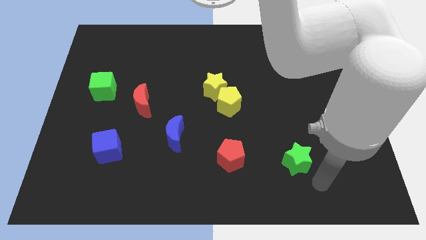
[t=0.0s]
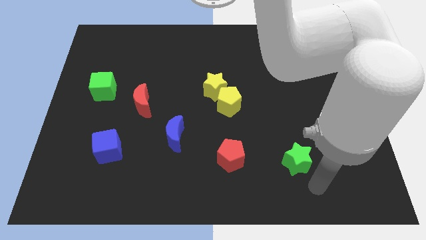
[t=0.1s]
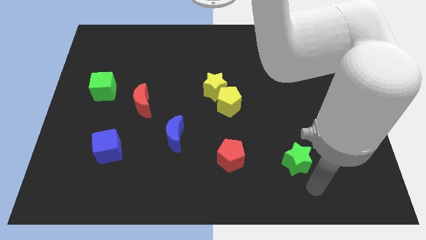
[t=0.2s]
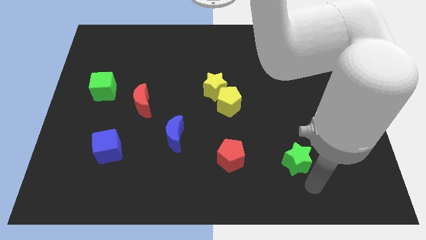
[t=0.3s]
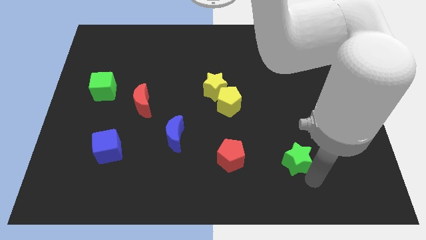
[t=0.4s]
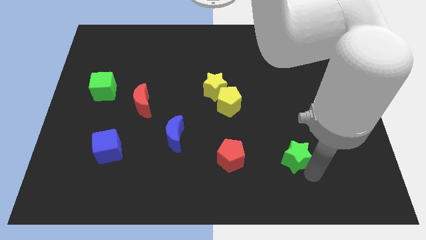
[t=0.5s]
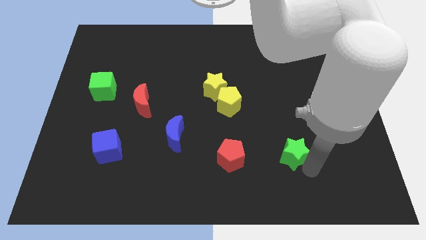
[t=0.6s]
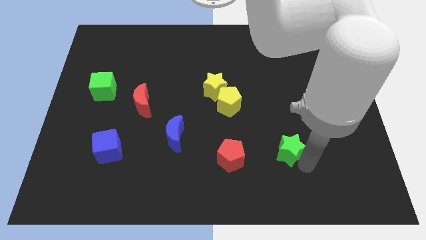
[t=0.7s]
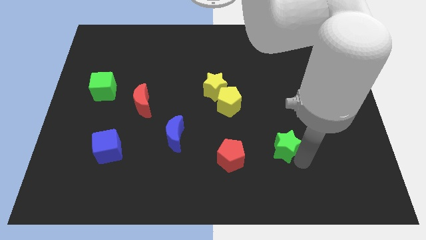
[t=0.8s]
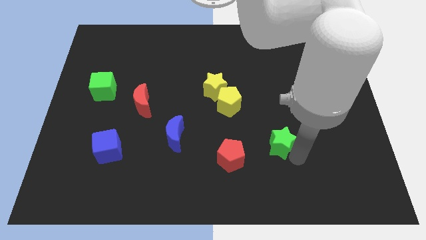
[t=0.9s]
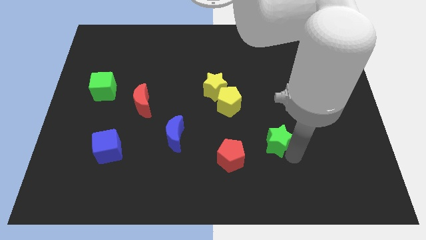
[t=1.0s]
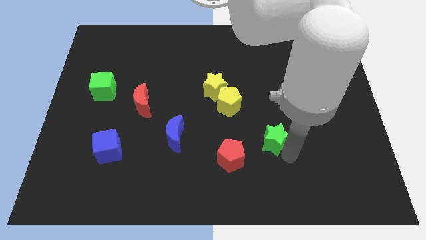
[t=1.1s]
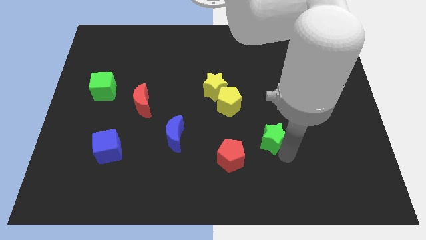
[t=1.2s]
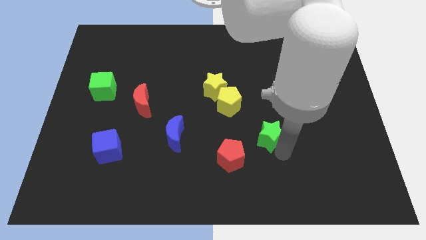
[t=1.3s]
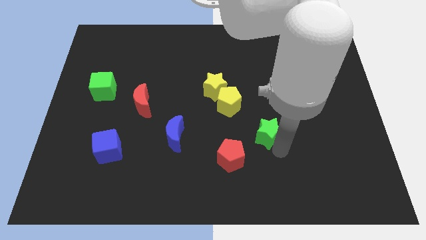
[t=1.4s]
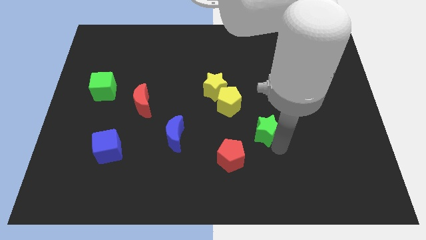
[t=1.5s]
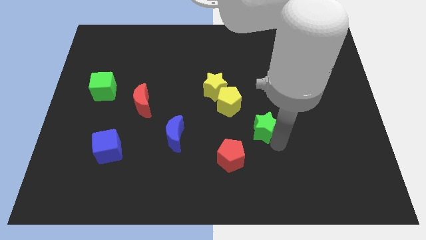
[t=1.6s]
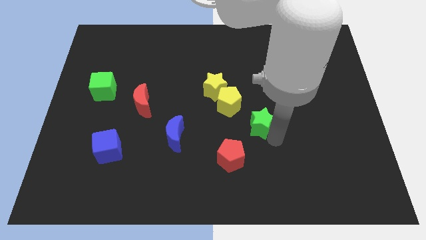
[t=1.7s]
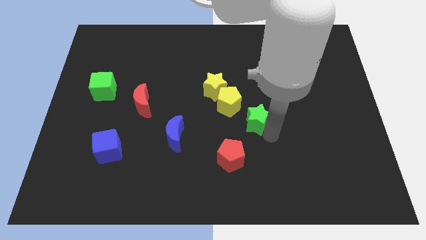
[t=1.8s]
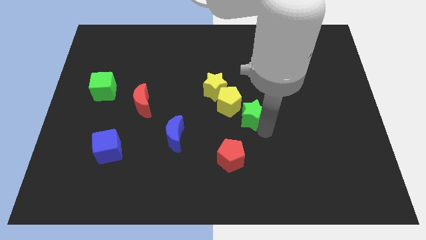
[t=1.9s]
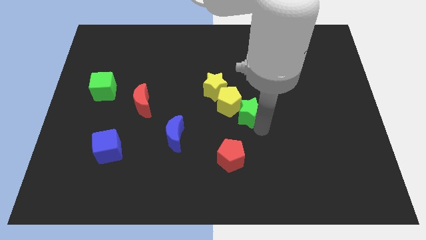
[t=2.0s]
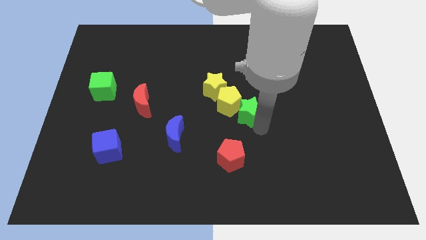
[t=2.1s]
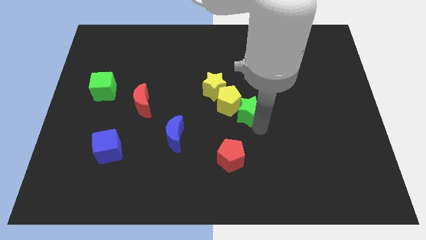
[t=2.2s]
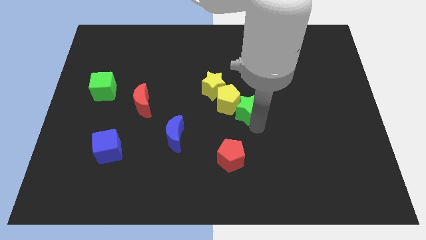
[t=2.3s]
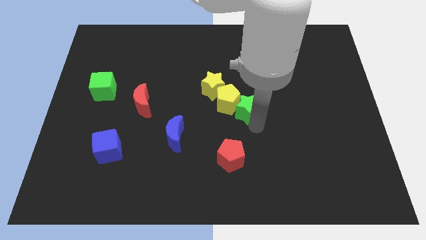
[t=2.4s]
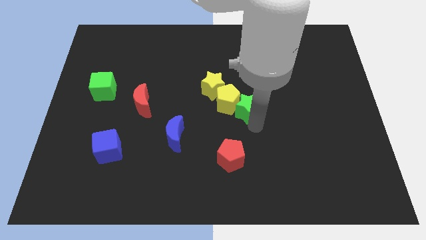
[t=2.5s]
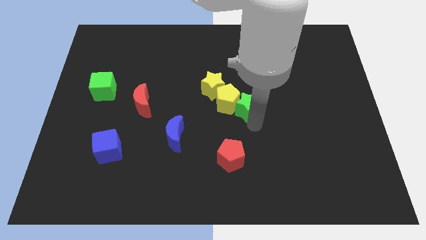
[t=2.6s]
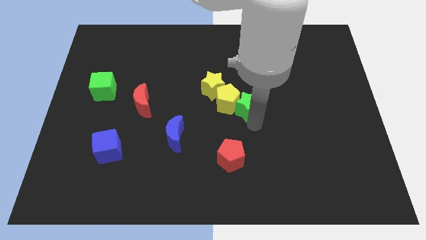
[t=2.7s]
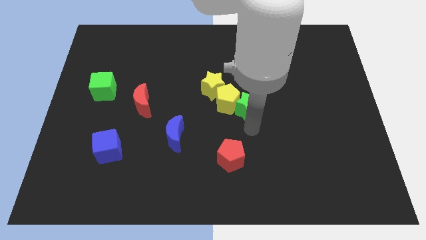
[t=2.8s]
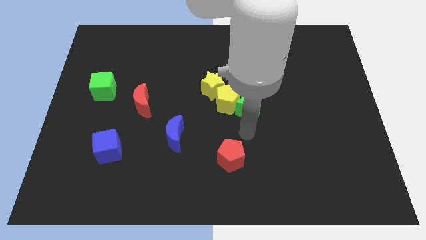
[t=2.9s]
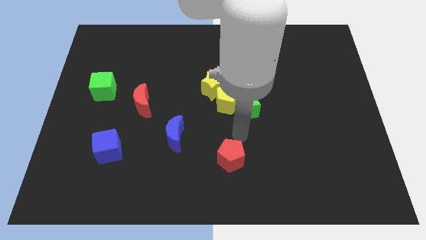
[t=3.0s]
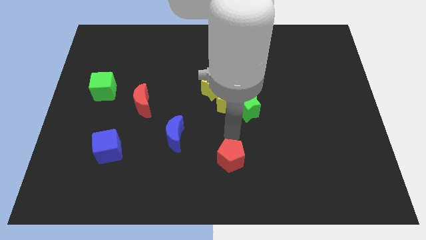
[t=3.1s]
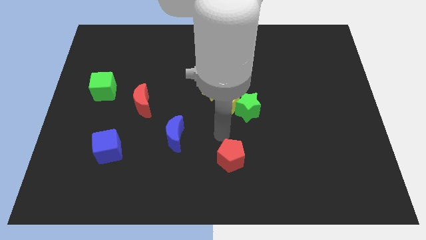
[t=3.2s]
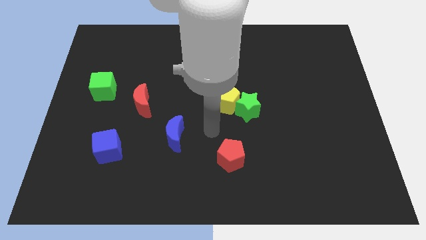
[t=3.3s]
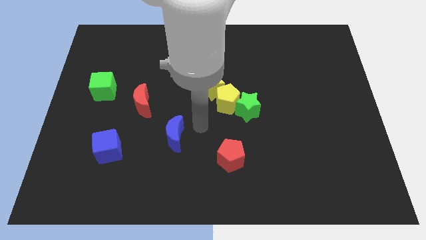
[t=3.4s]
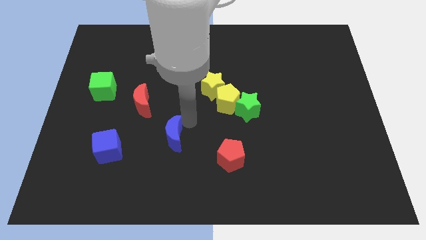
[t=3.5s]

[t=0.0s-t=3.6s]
push the green star to the right side of the yellow pentagon

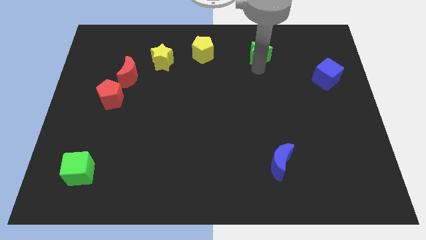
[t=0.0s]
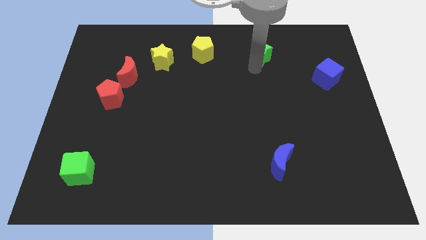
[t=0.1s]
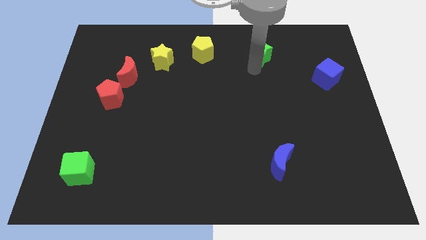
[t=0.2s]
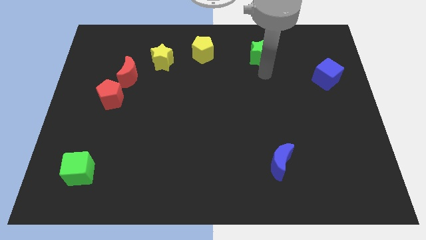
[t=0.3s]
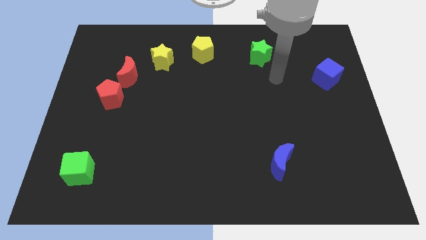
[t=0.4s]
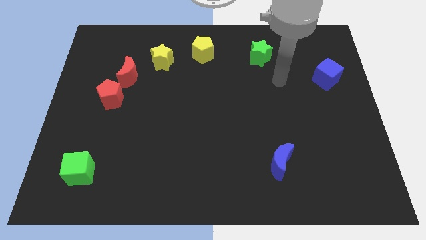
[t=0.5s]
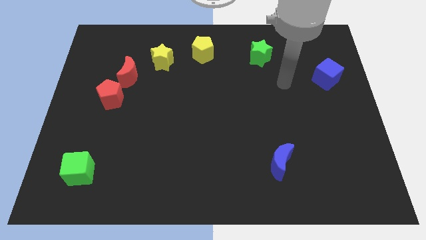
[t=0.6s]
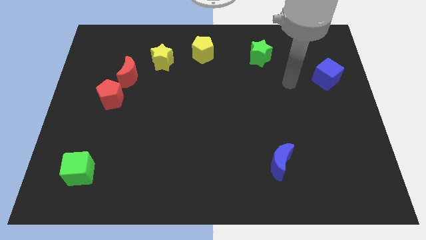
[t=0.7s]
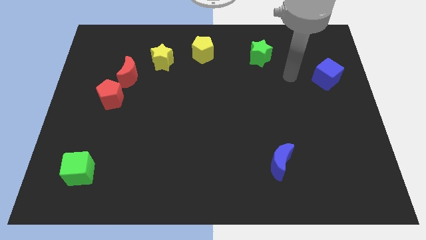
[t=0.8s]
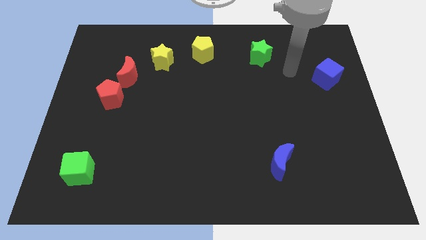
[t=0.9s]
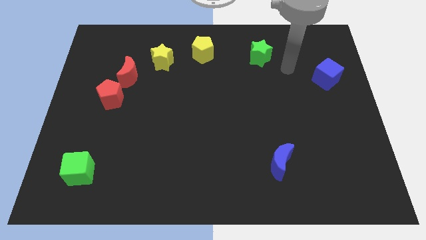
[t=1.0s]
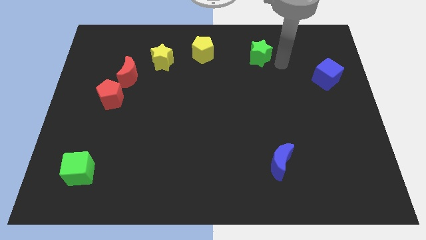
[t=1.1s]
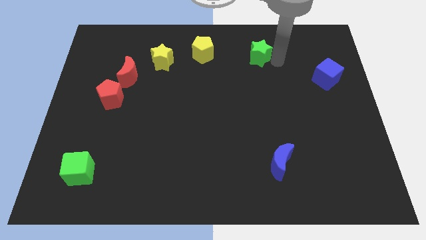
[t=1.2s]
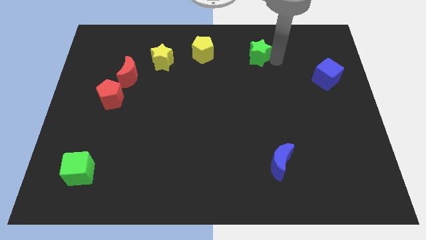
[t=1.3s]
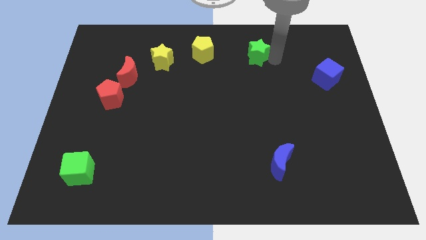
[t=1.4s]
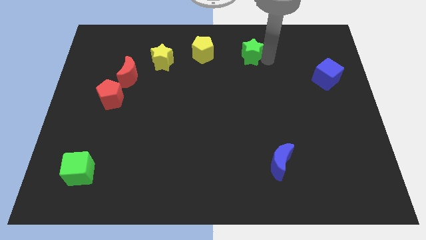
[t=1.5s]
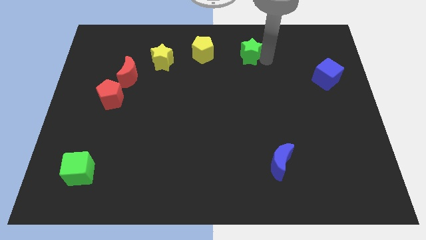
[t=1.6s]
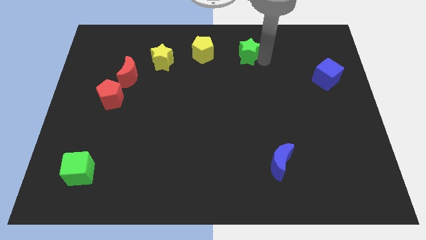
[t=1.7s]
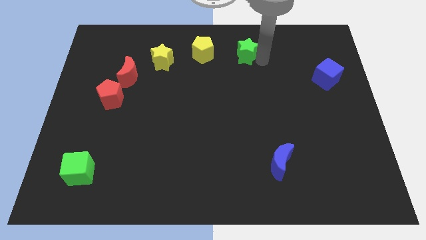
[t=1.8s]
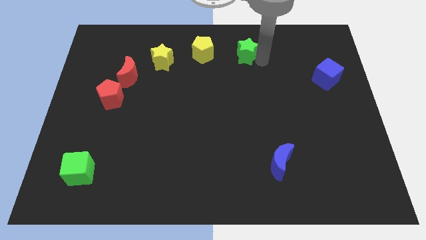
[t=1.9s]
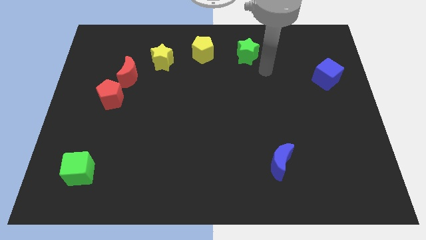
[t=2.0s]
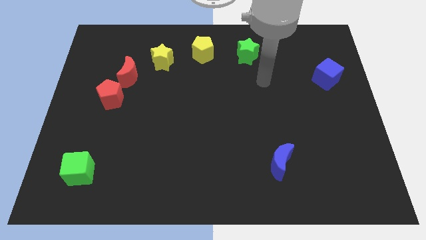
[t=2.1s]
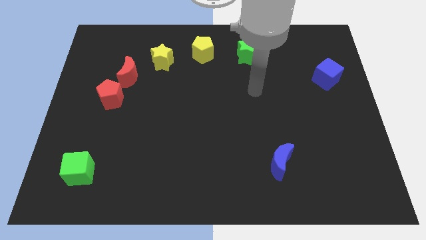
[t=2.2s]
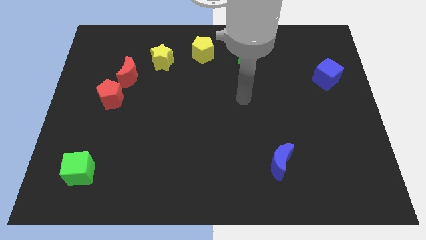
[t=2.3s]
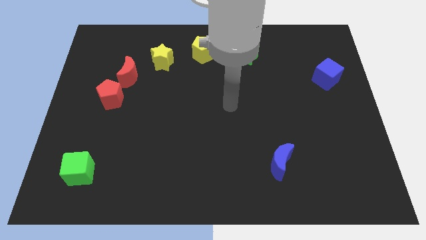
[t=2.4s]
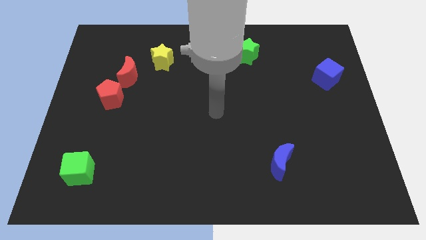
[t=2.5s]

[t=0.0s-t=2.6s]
move green star adjacent to yellow pentagon

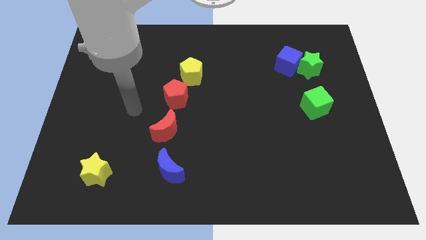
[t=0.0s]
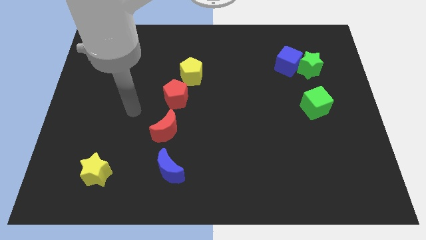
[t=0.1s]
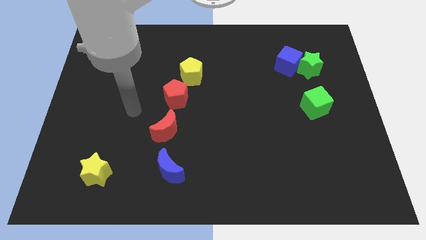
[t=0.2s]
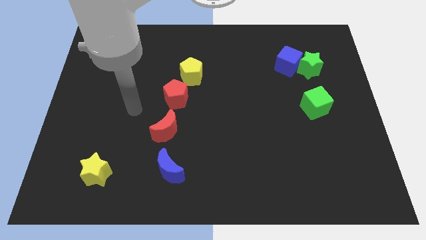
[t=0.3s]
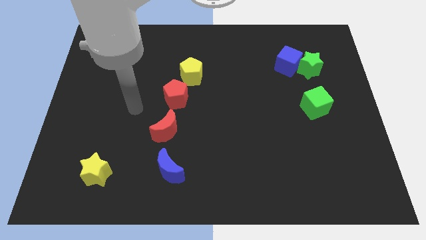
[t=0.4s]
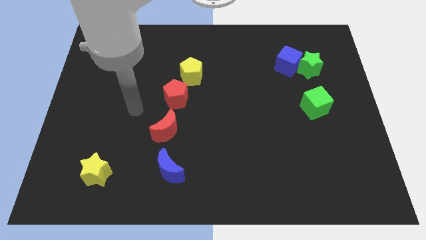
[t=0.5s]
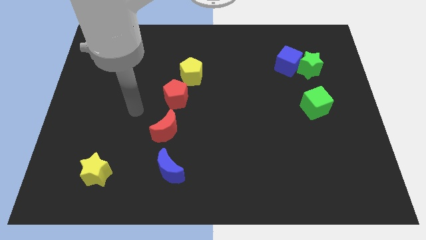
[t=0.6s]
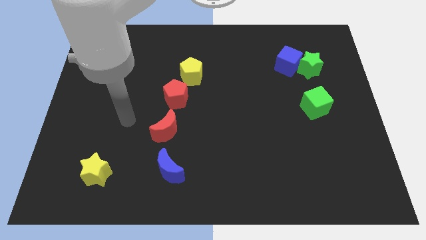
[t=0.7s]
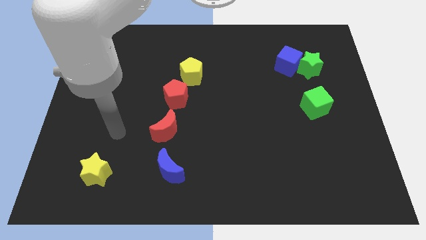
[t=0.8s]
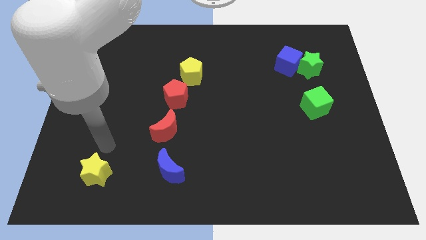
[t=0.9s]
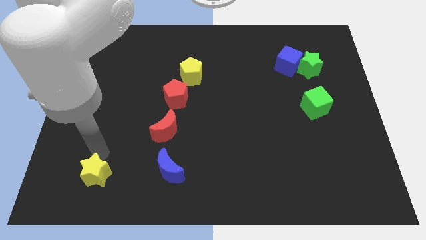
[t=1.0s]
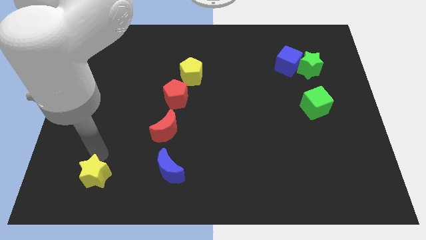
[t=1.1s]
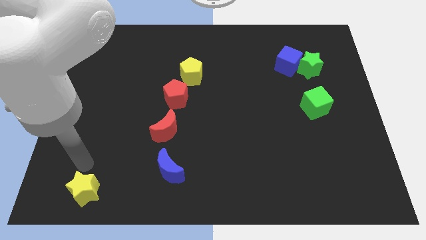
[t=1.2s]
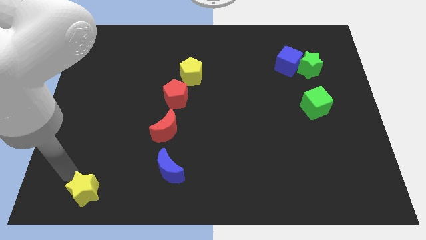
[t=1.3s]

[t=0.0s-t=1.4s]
push the yellow star slightly downwards

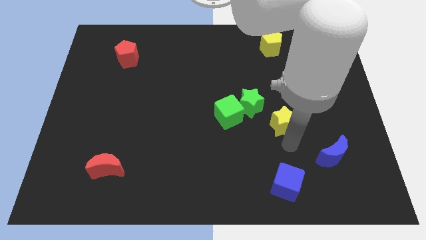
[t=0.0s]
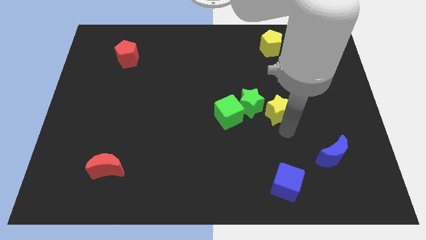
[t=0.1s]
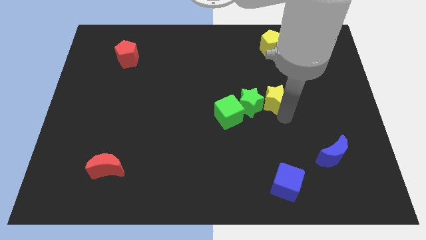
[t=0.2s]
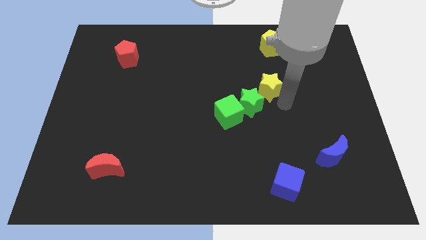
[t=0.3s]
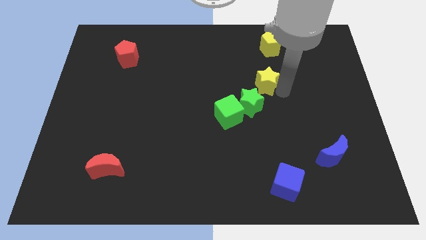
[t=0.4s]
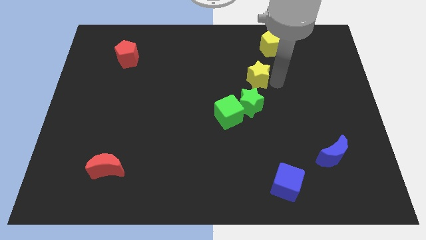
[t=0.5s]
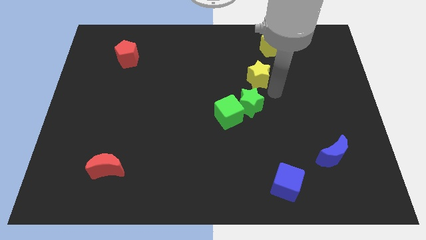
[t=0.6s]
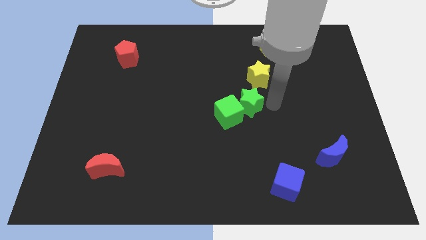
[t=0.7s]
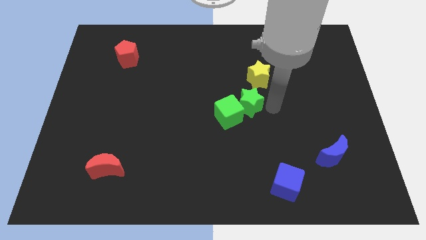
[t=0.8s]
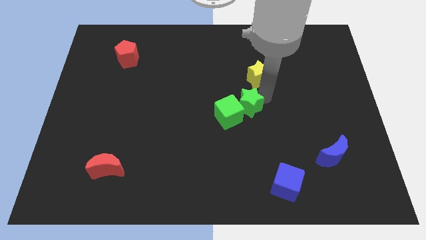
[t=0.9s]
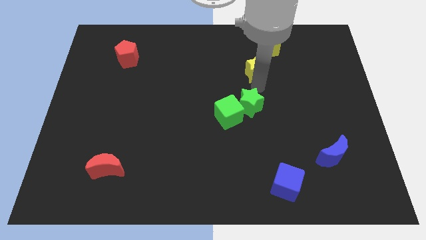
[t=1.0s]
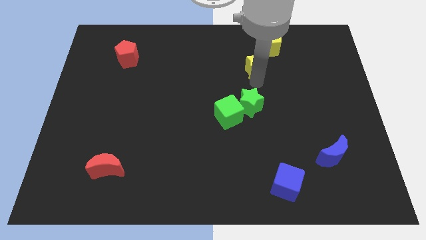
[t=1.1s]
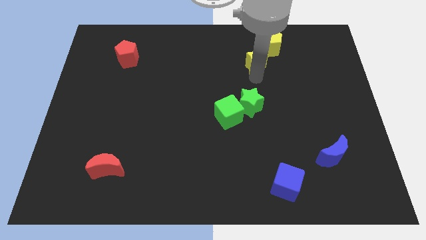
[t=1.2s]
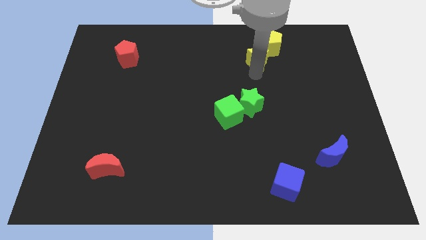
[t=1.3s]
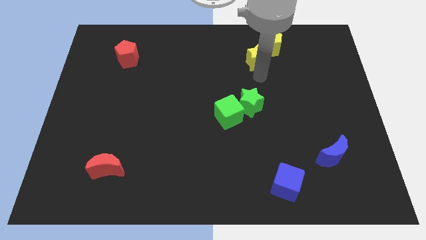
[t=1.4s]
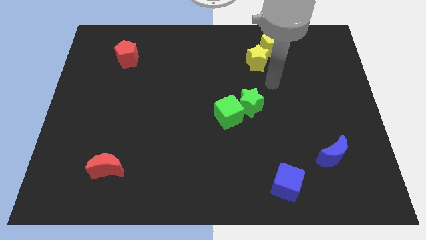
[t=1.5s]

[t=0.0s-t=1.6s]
place yellow star close to yellow pentagon
